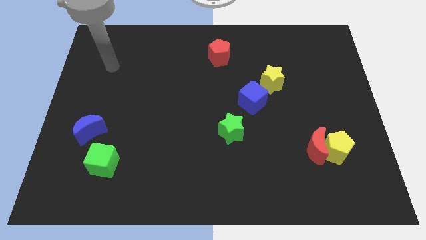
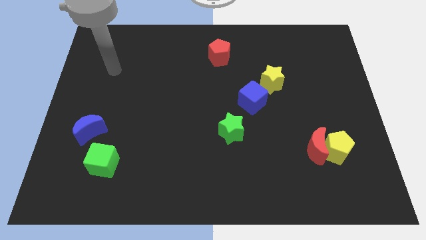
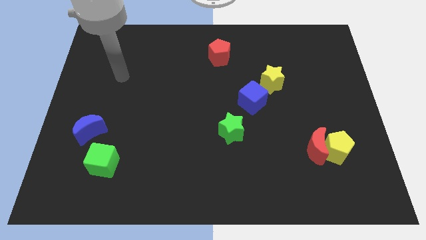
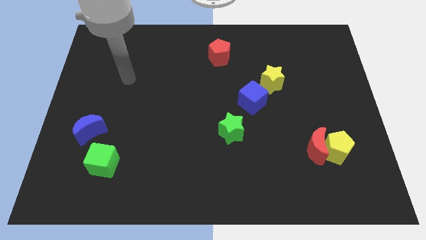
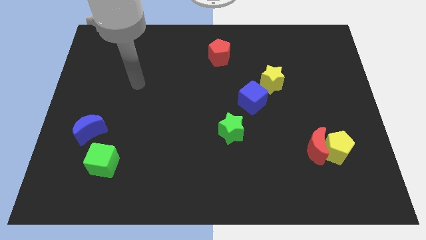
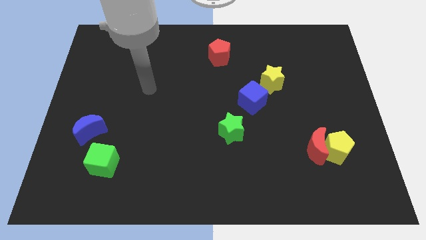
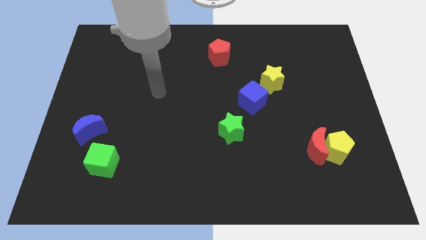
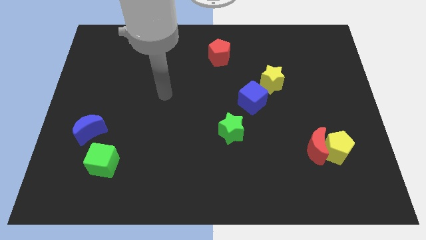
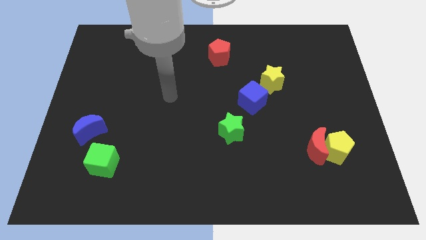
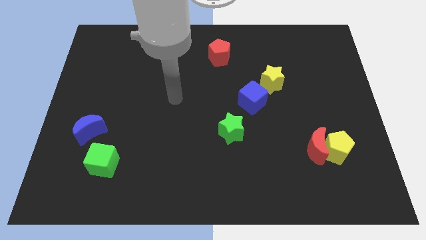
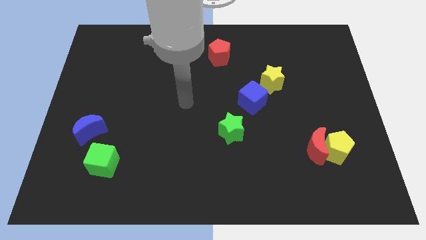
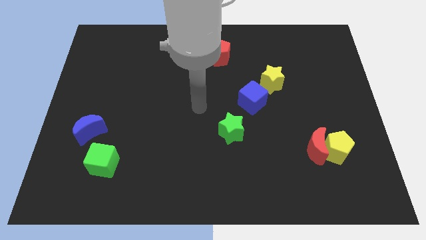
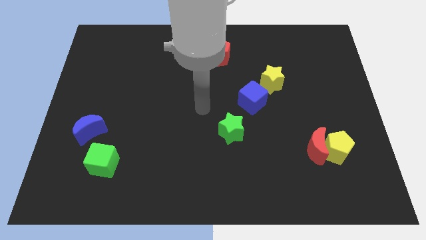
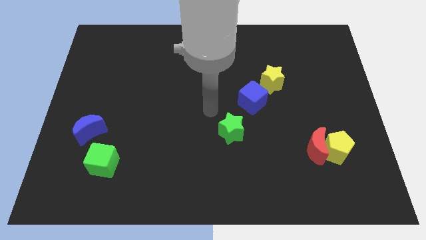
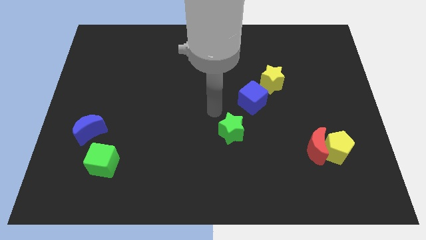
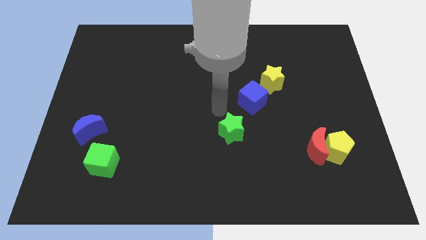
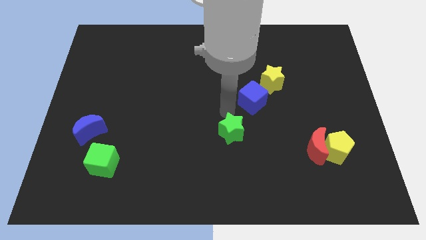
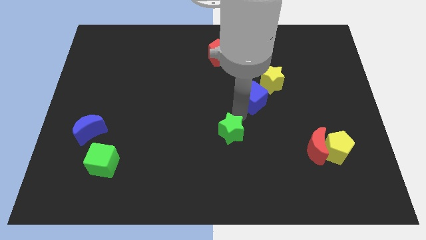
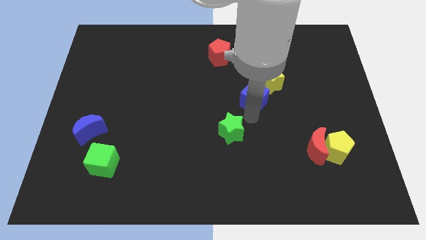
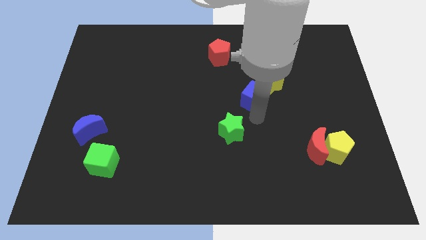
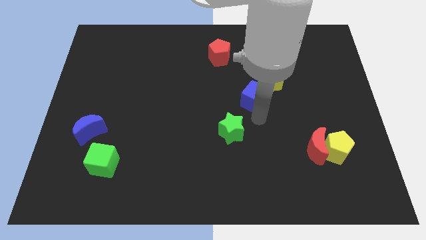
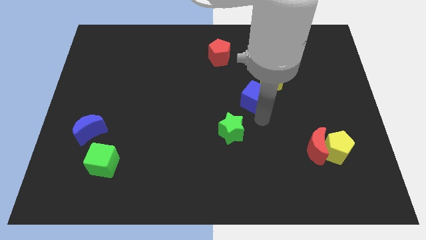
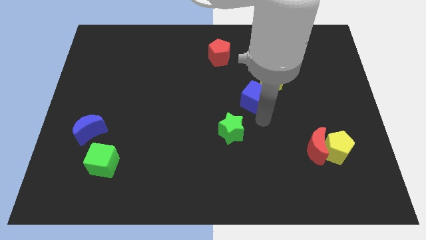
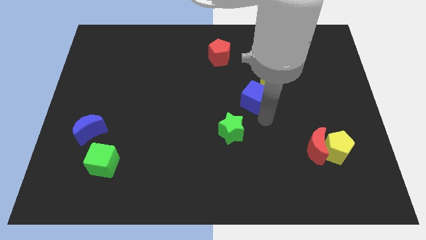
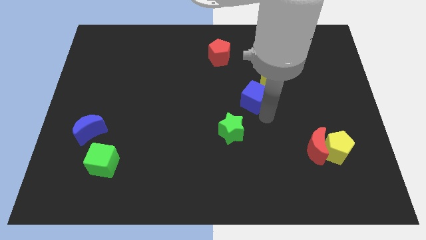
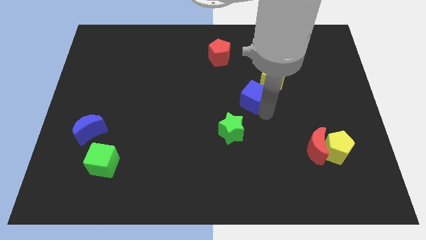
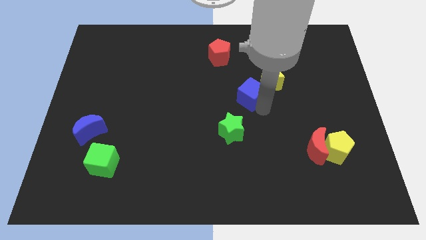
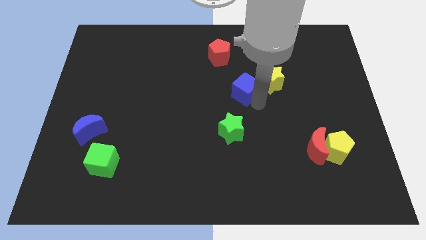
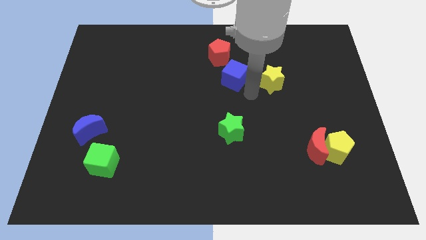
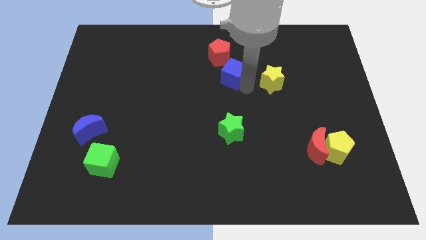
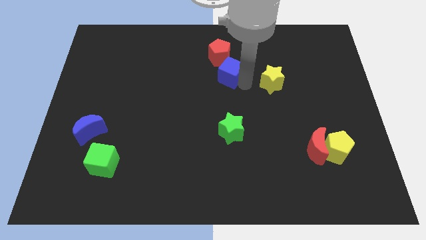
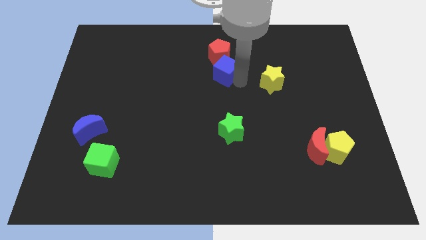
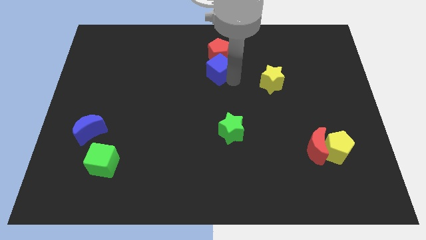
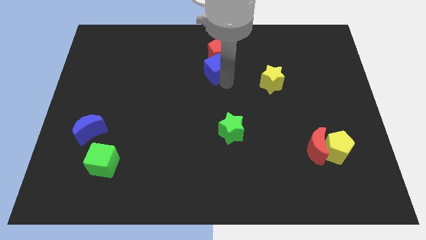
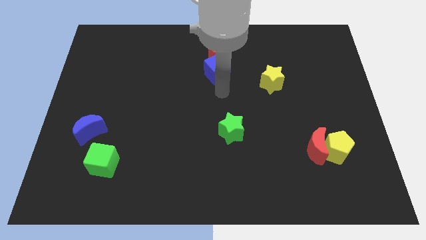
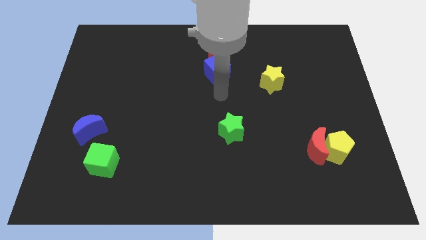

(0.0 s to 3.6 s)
drag the blue cube and place it below the red pentagon

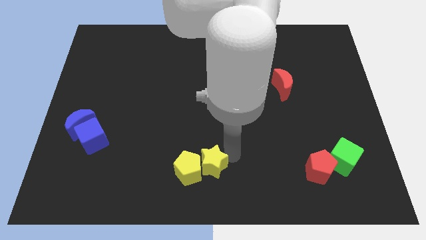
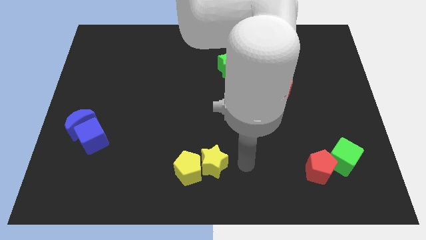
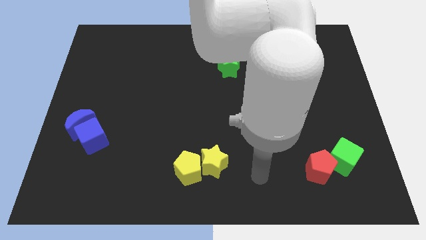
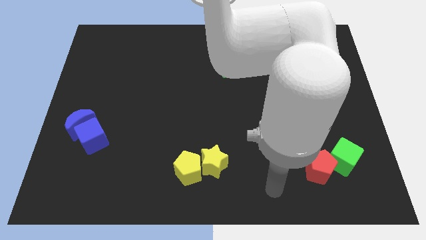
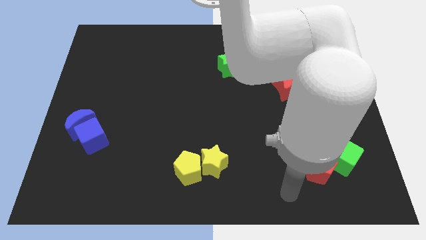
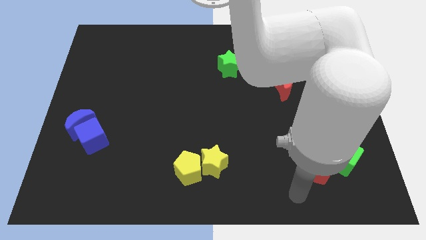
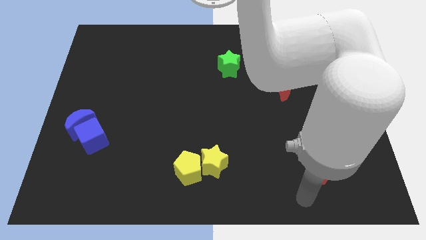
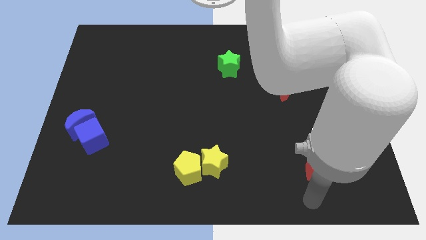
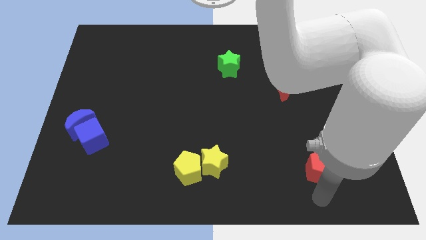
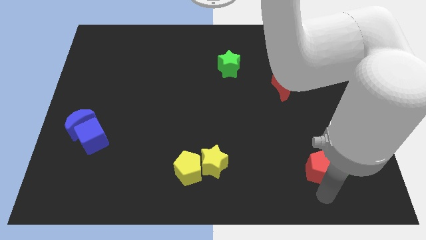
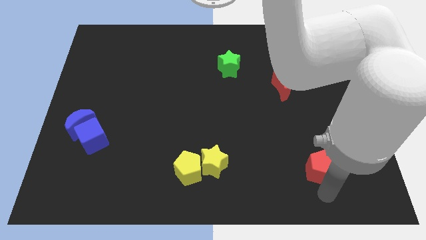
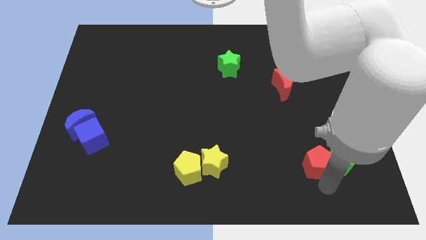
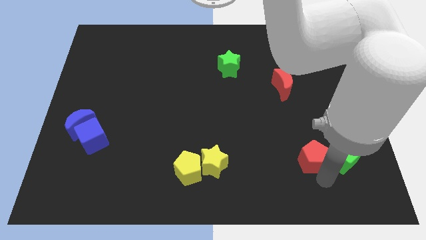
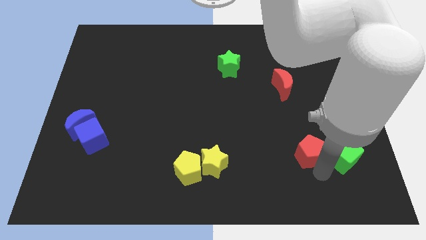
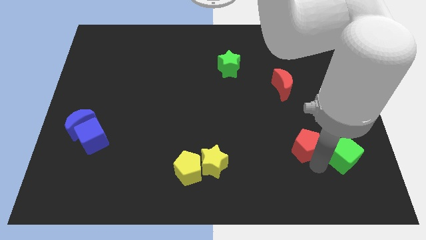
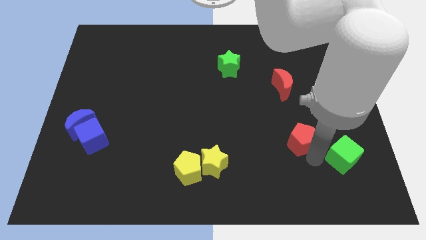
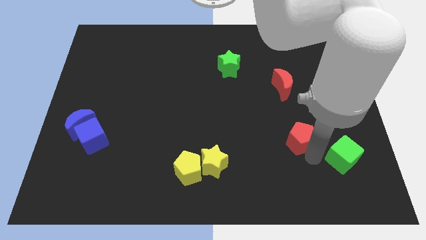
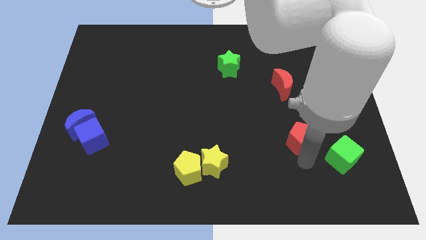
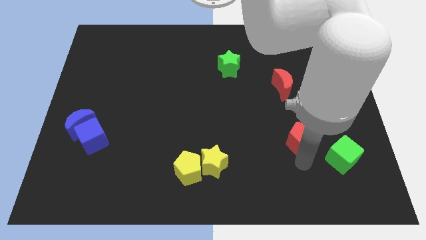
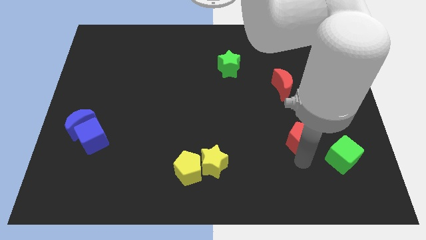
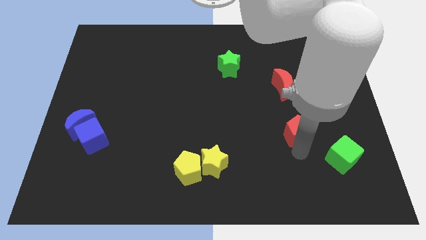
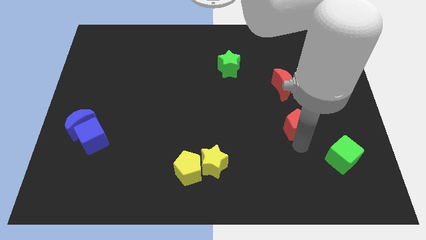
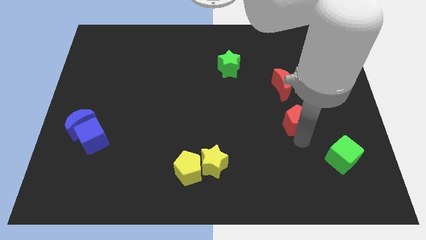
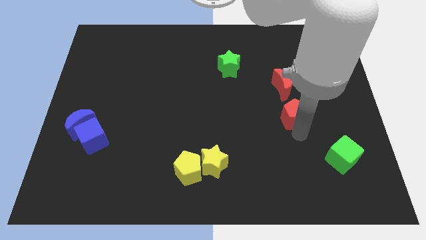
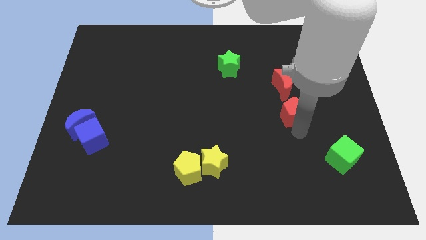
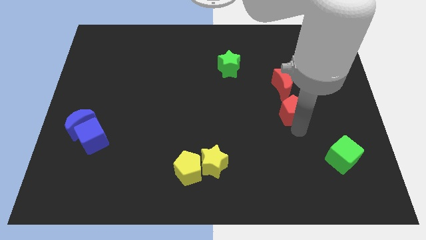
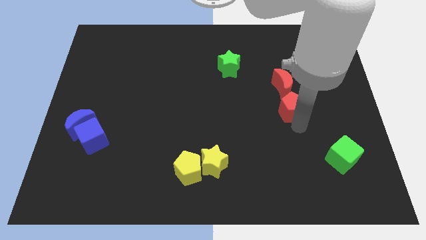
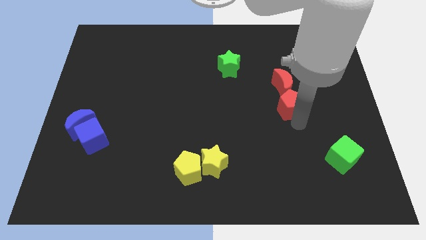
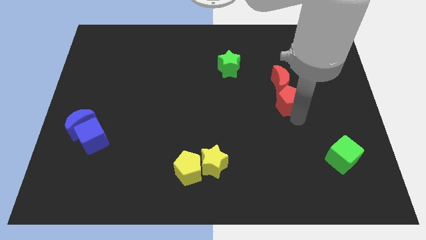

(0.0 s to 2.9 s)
place the red pentagon below the red crescent

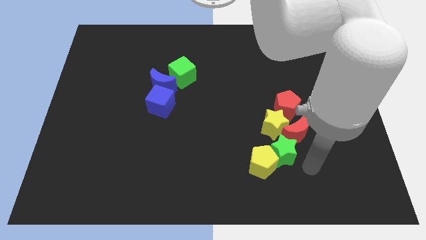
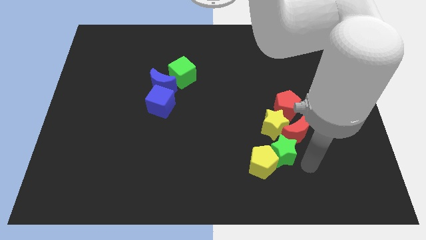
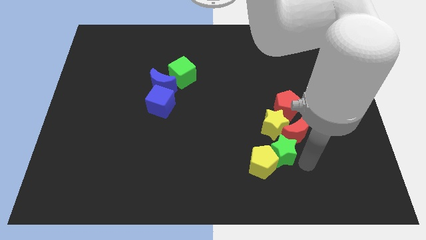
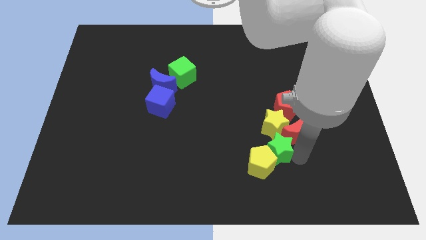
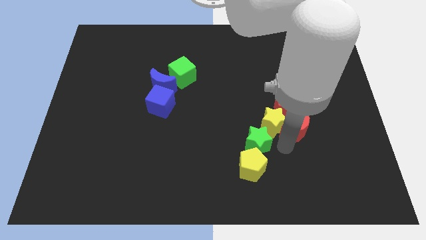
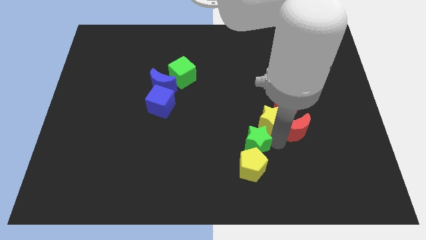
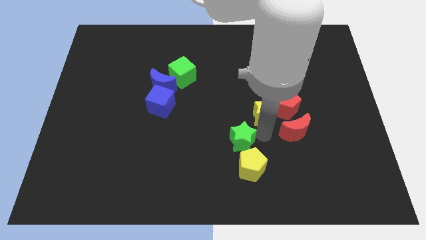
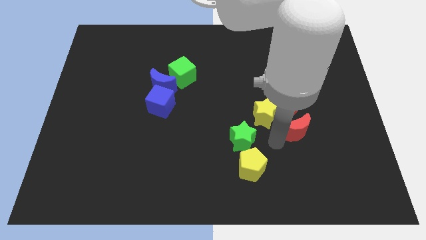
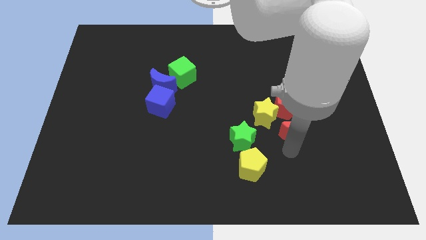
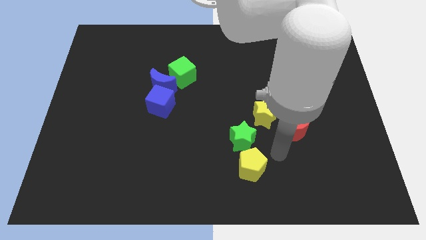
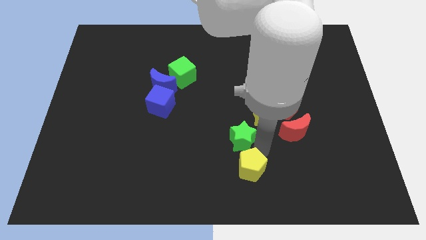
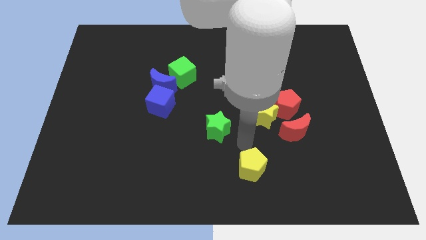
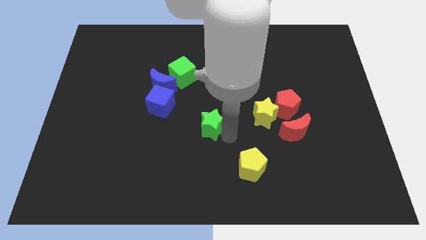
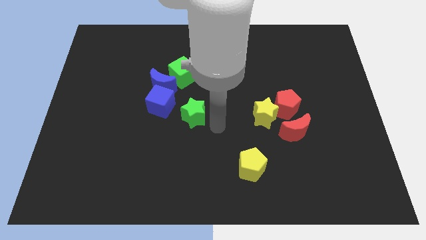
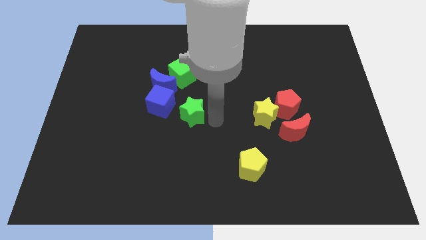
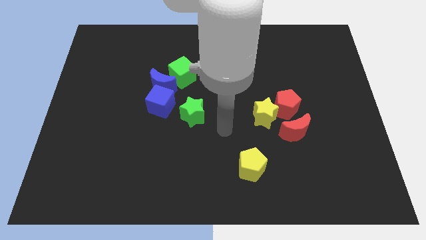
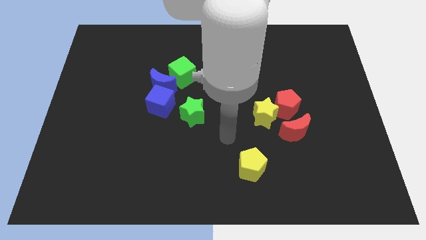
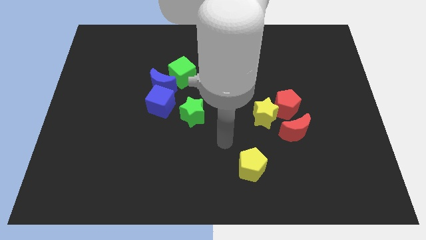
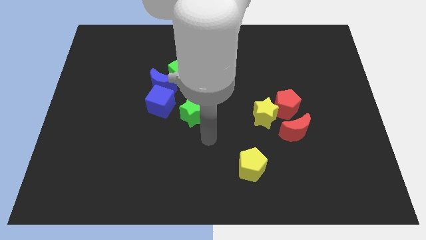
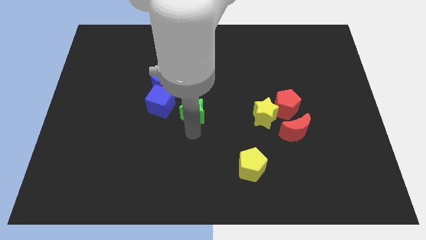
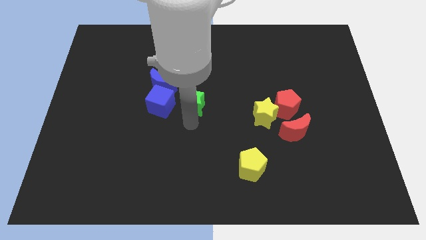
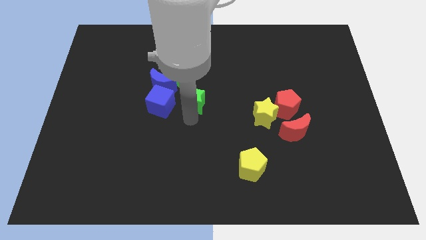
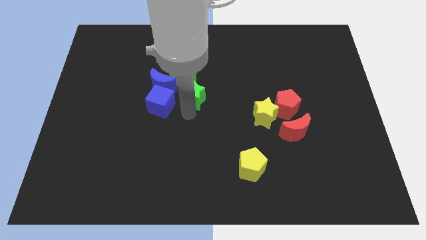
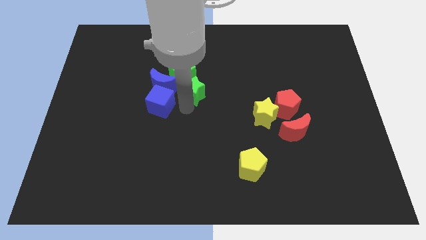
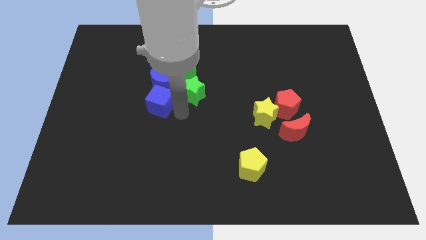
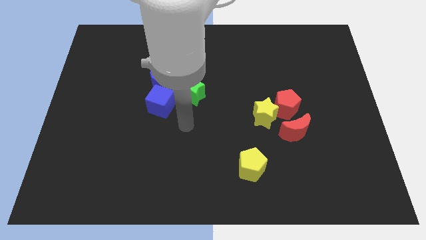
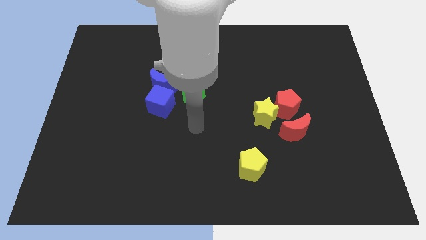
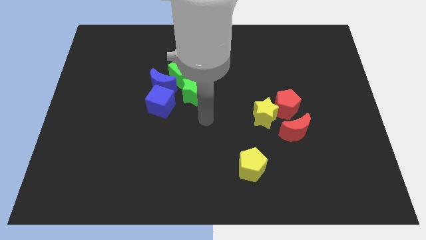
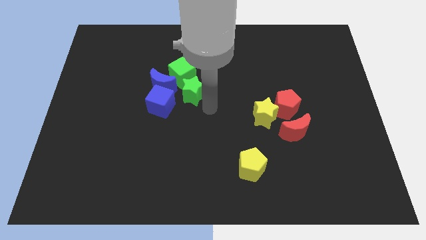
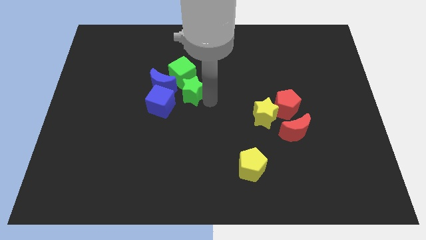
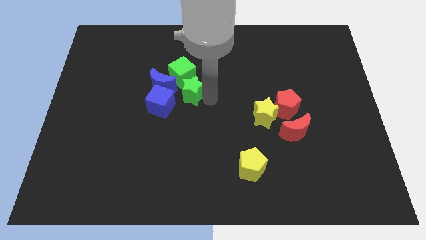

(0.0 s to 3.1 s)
slide green star below green cube
